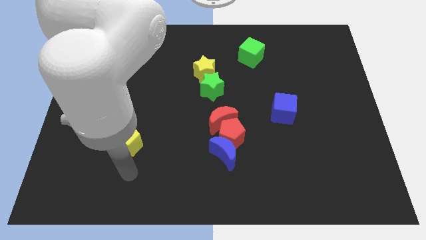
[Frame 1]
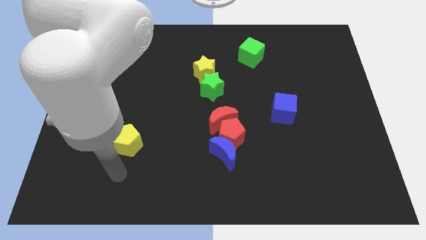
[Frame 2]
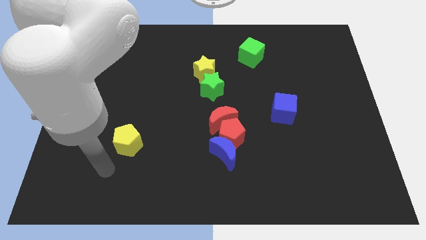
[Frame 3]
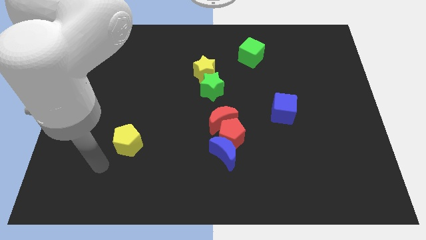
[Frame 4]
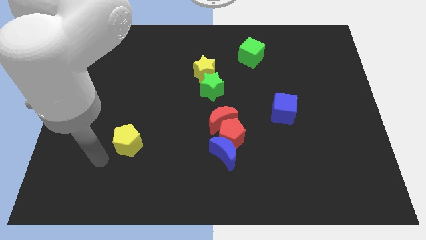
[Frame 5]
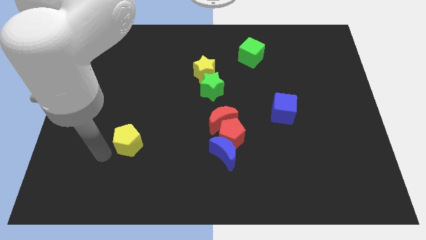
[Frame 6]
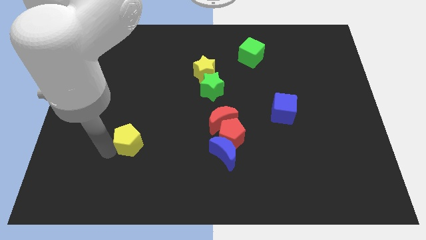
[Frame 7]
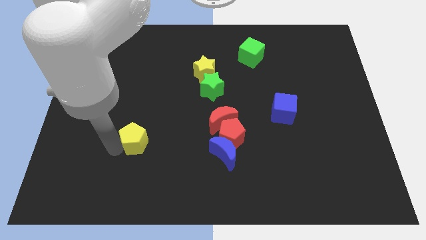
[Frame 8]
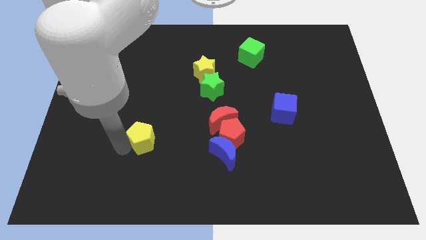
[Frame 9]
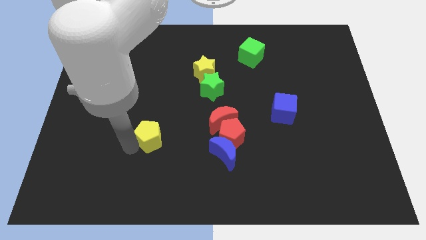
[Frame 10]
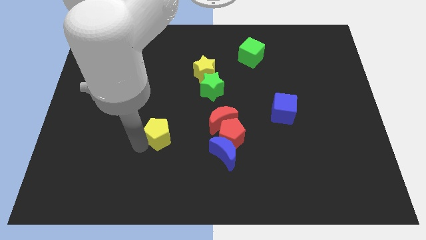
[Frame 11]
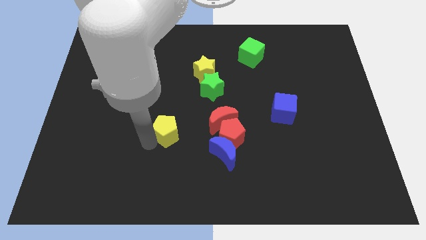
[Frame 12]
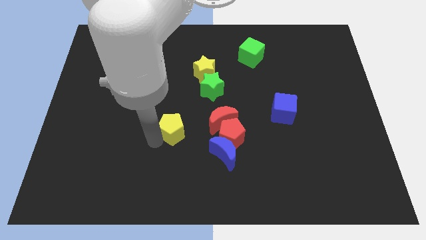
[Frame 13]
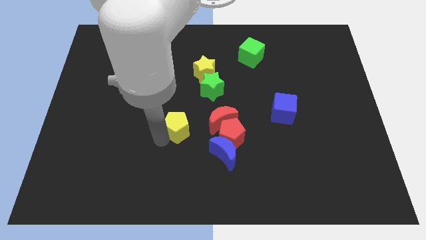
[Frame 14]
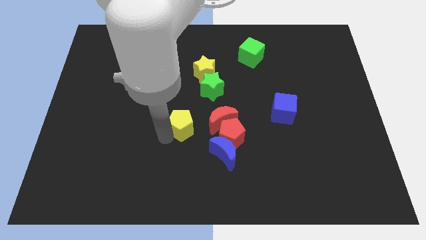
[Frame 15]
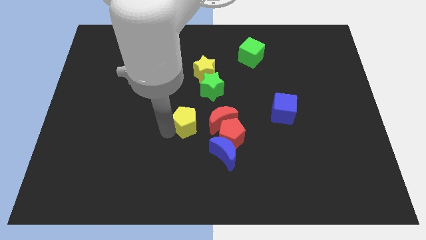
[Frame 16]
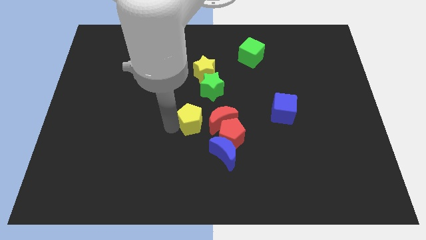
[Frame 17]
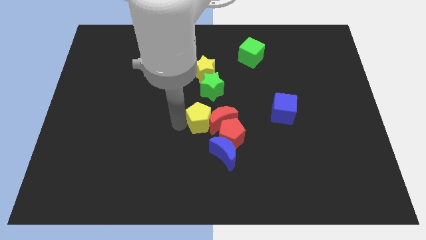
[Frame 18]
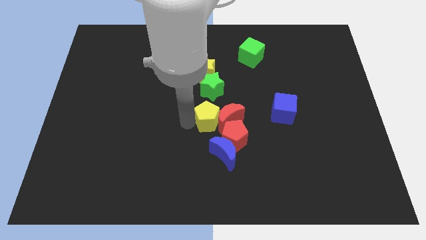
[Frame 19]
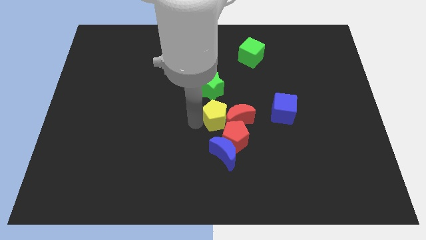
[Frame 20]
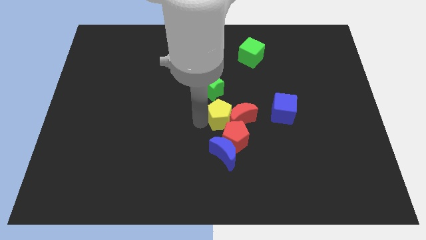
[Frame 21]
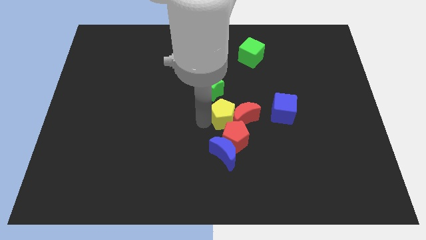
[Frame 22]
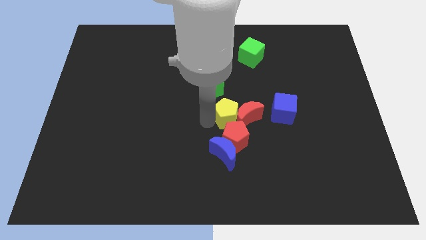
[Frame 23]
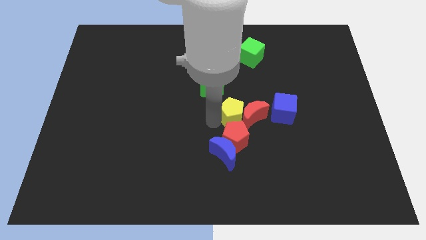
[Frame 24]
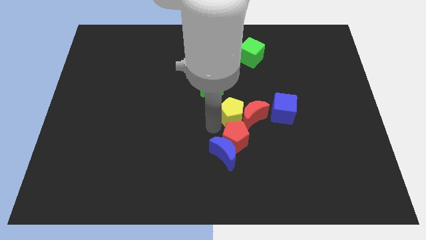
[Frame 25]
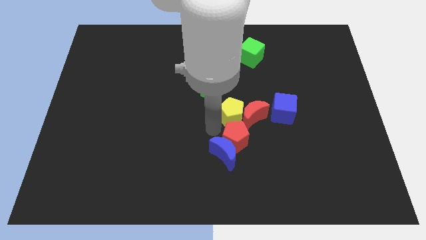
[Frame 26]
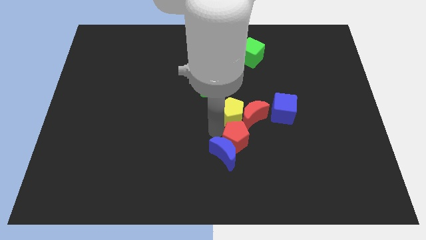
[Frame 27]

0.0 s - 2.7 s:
push the yellow pentagon along with the red crescent to the left of the blue cube

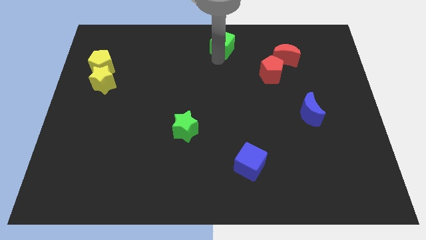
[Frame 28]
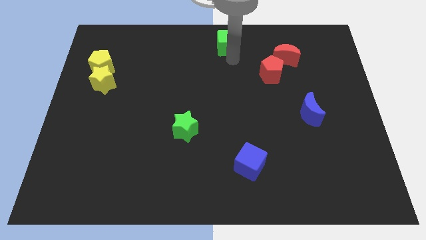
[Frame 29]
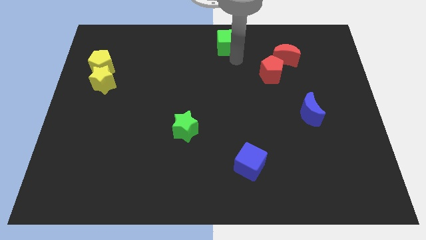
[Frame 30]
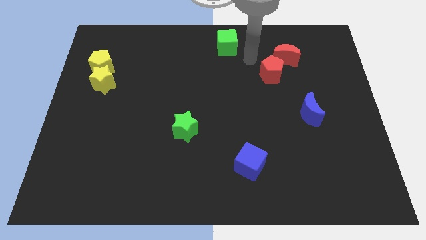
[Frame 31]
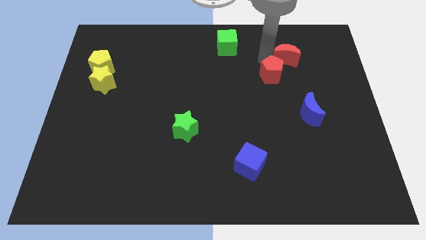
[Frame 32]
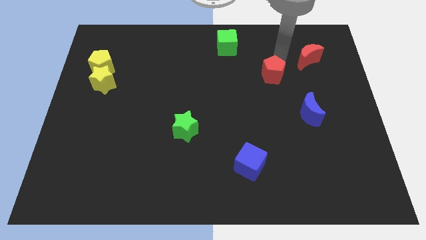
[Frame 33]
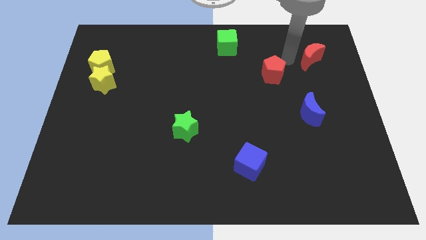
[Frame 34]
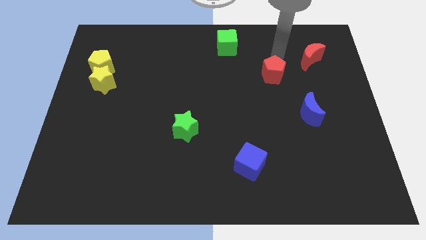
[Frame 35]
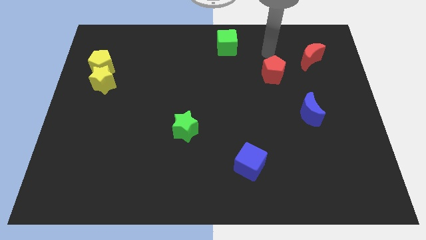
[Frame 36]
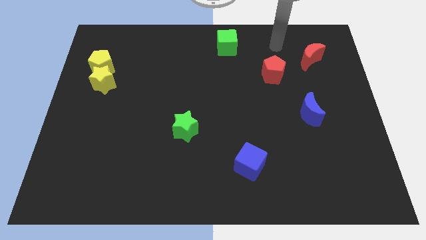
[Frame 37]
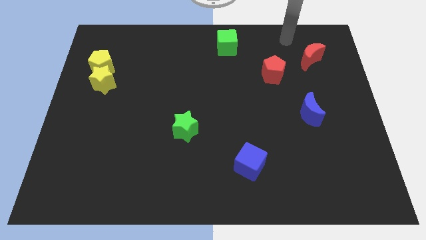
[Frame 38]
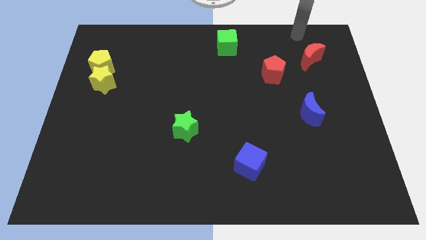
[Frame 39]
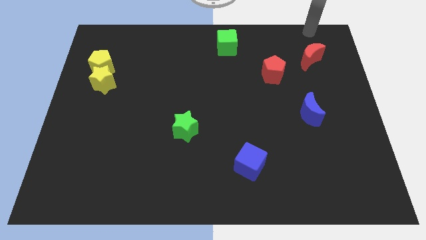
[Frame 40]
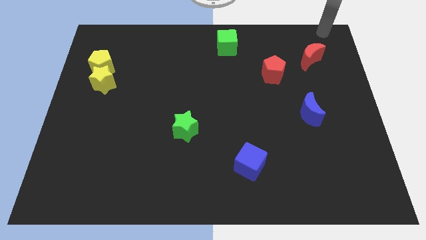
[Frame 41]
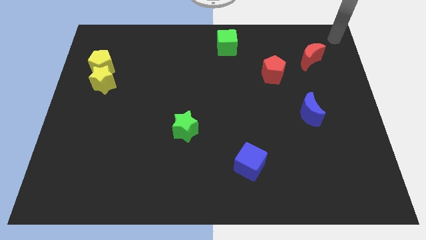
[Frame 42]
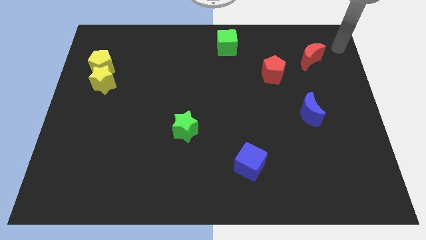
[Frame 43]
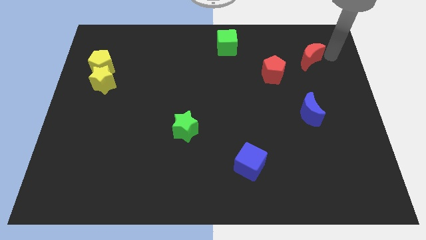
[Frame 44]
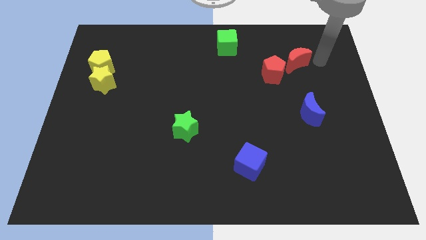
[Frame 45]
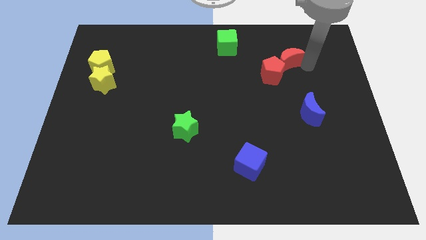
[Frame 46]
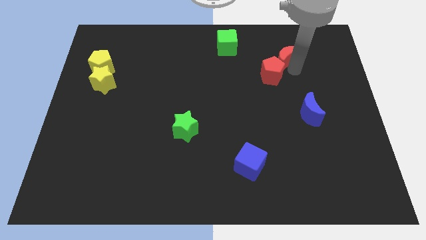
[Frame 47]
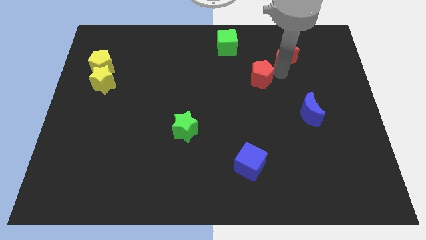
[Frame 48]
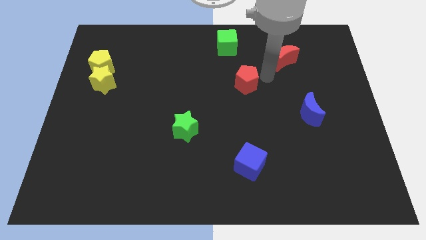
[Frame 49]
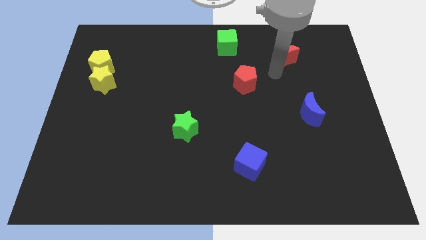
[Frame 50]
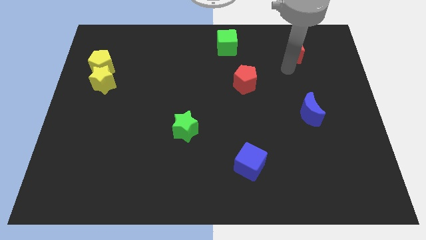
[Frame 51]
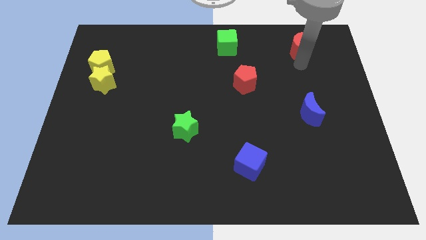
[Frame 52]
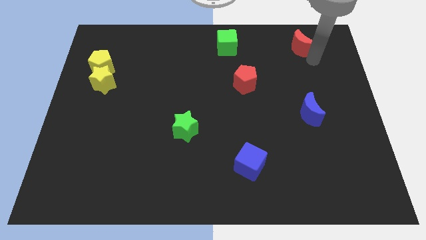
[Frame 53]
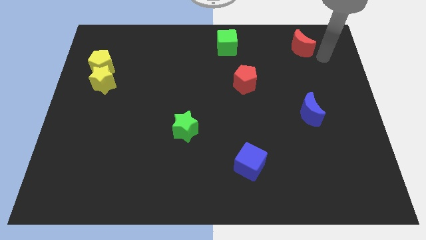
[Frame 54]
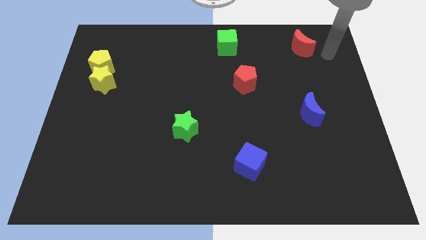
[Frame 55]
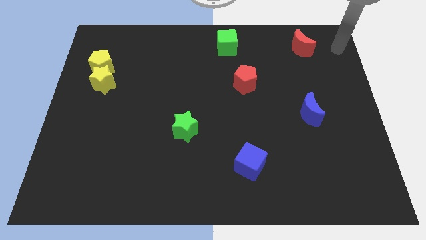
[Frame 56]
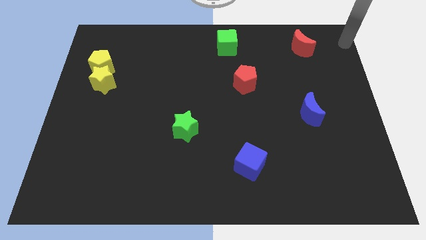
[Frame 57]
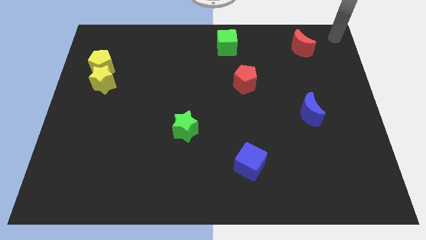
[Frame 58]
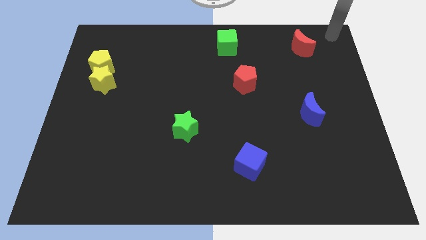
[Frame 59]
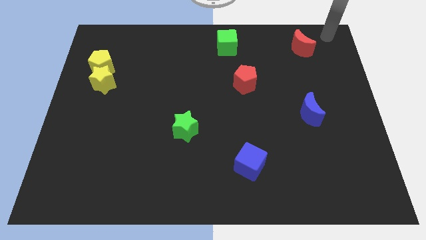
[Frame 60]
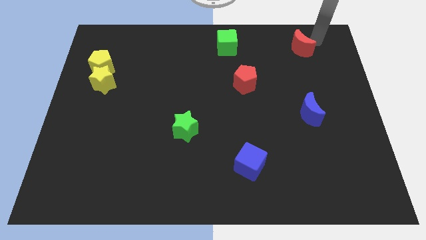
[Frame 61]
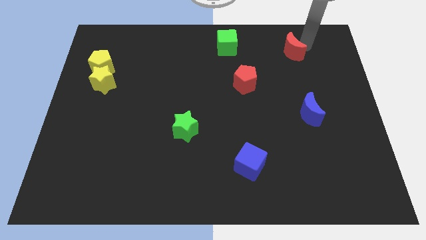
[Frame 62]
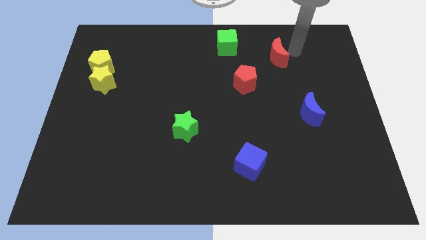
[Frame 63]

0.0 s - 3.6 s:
separate the red pentagon and red moon

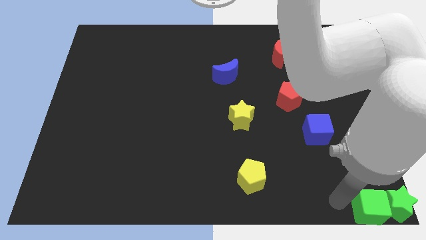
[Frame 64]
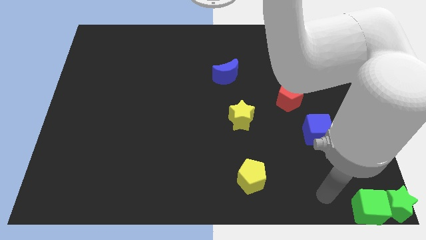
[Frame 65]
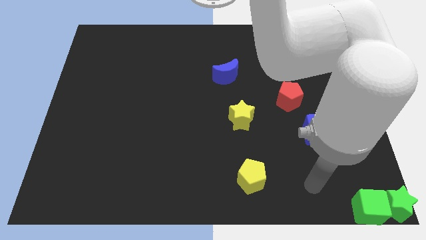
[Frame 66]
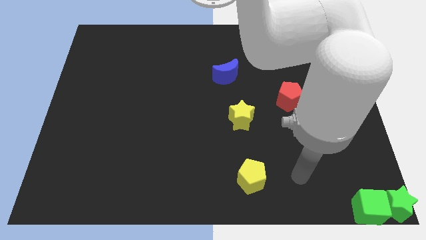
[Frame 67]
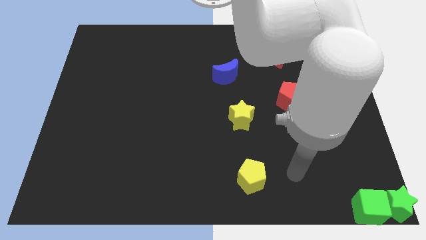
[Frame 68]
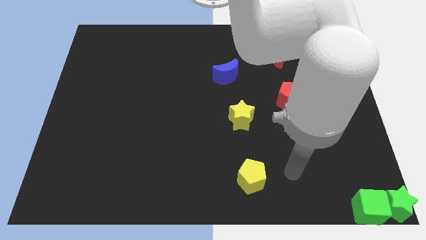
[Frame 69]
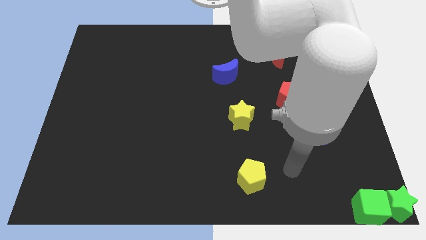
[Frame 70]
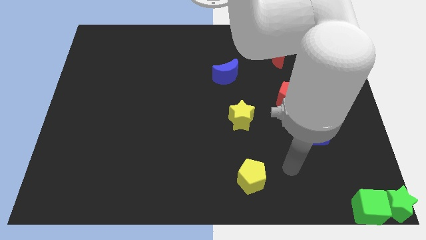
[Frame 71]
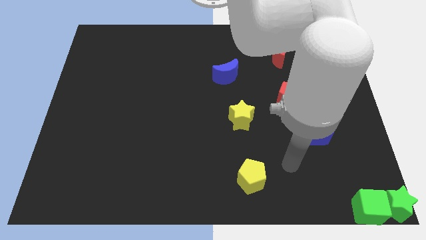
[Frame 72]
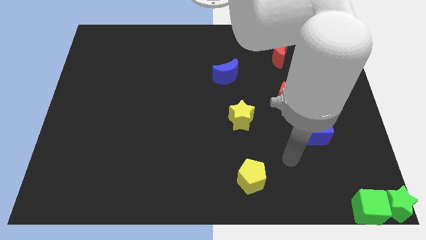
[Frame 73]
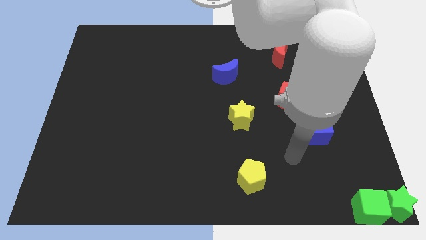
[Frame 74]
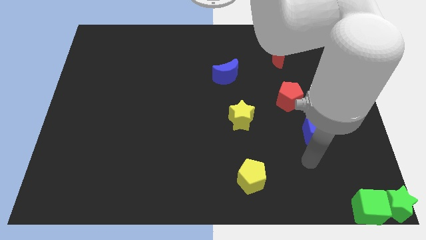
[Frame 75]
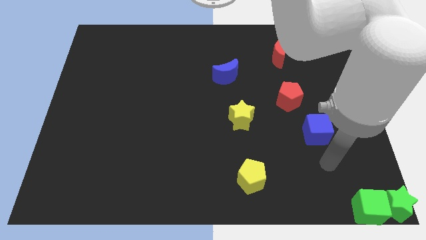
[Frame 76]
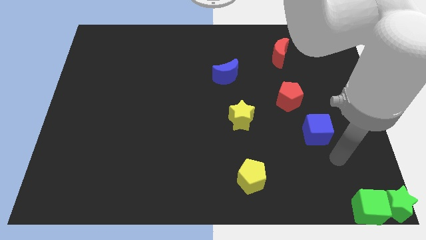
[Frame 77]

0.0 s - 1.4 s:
move your arm to the bottom of blue cube

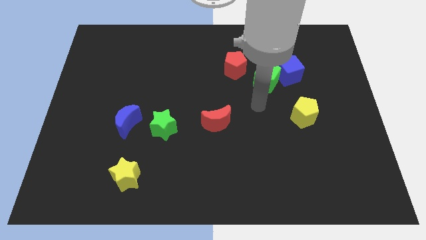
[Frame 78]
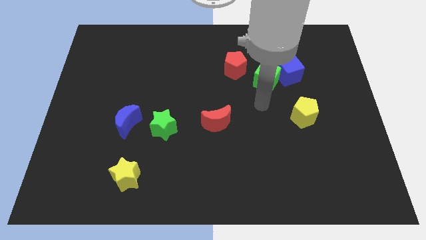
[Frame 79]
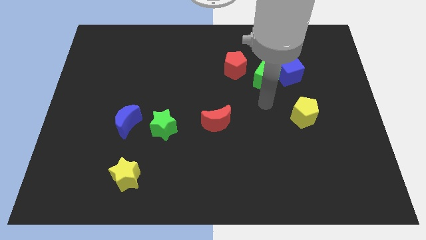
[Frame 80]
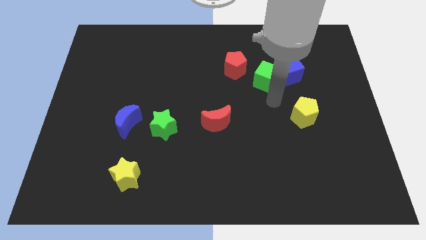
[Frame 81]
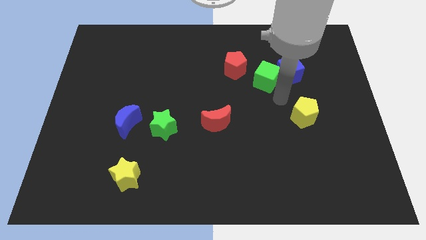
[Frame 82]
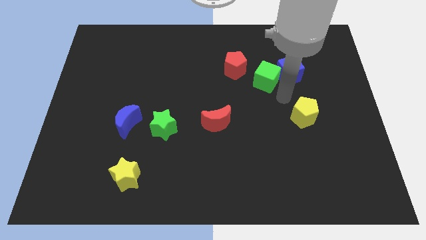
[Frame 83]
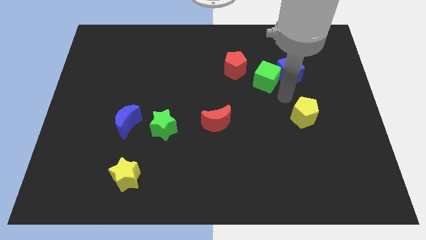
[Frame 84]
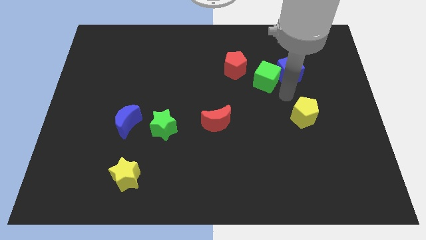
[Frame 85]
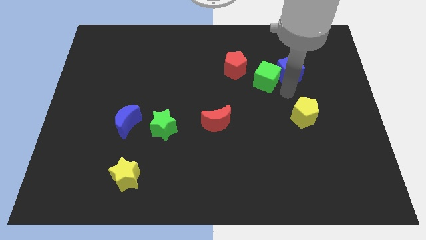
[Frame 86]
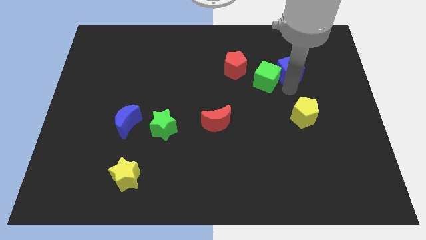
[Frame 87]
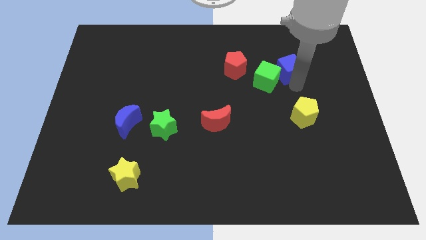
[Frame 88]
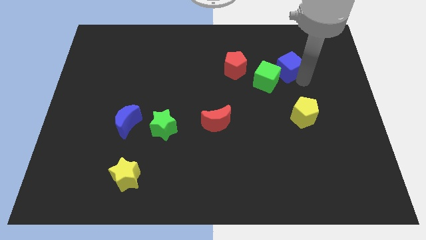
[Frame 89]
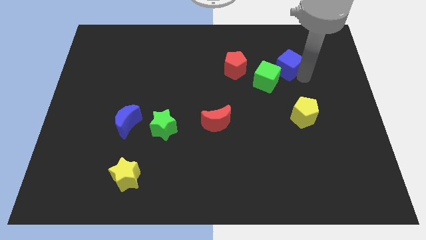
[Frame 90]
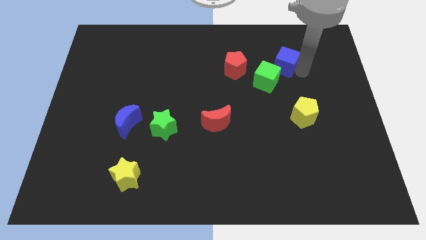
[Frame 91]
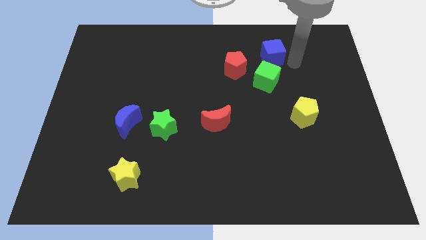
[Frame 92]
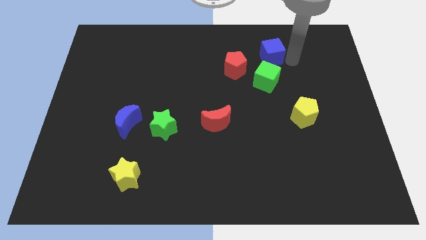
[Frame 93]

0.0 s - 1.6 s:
move the blue cube aove the green cube
